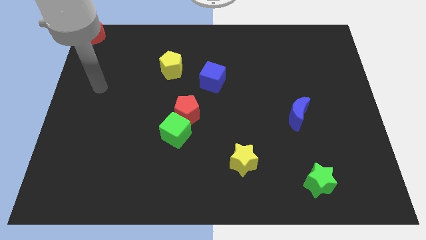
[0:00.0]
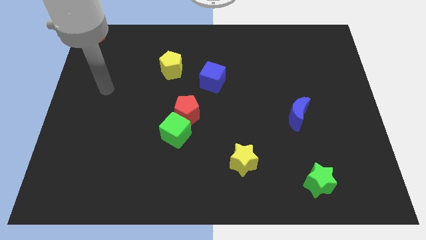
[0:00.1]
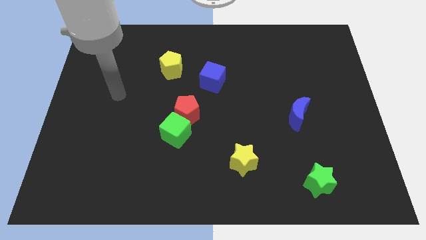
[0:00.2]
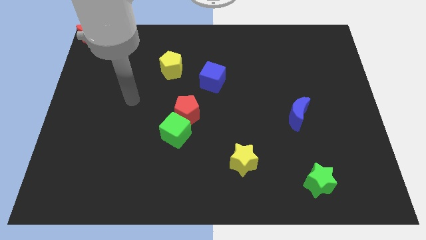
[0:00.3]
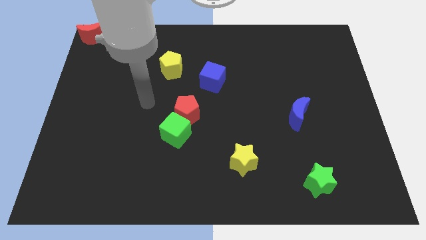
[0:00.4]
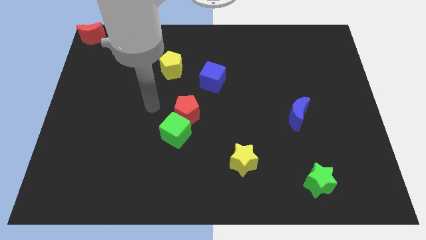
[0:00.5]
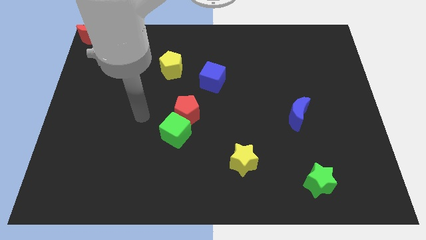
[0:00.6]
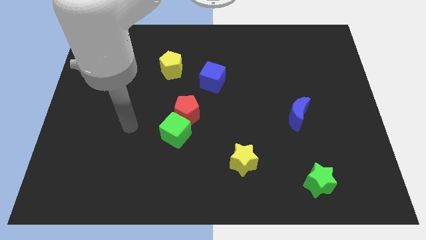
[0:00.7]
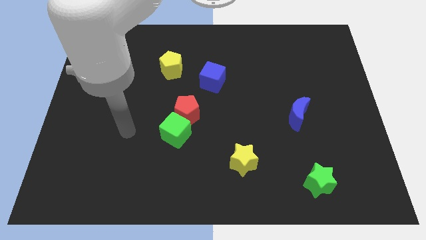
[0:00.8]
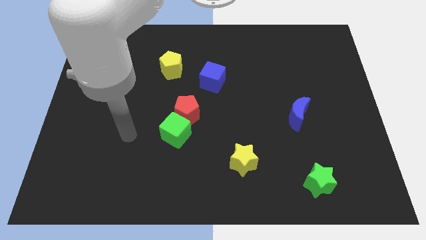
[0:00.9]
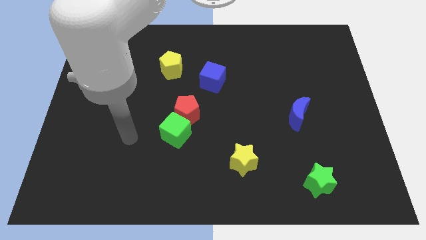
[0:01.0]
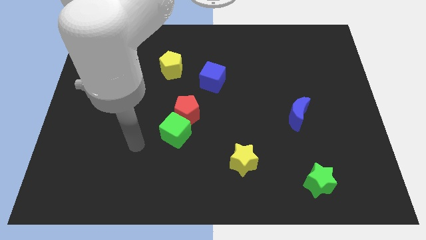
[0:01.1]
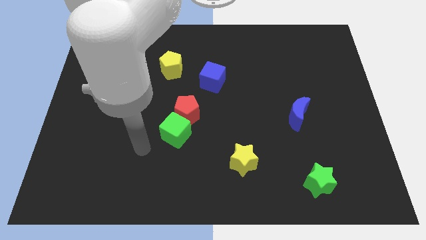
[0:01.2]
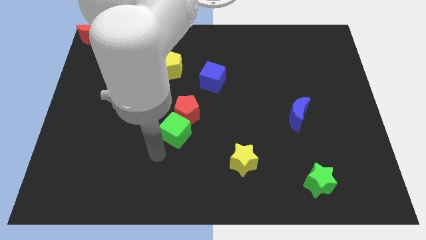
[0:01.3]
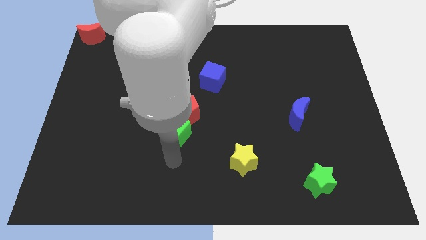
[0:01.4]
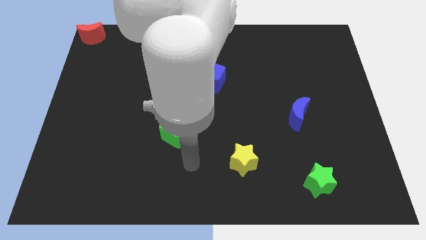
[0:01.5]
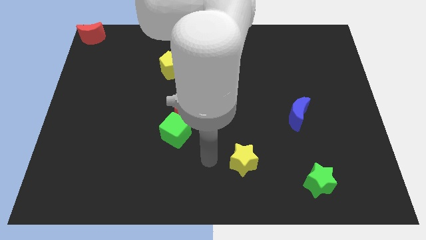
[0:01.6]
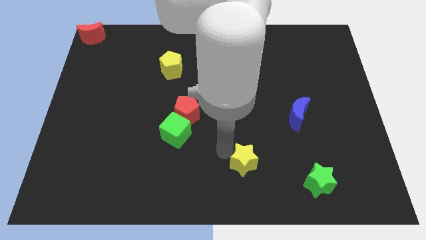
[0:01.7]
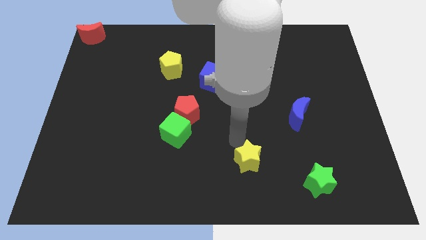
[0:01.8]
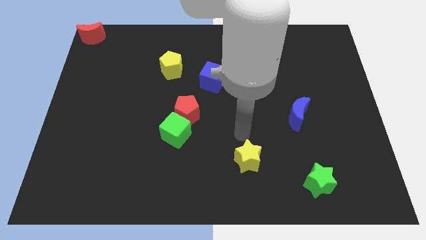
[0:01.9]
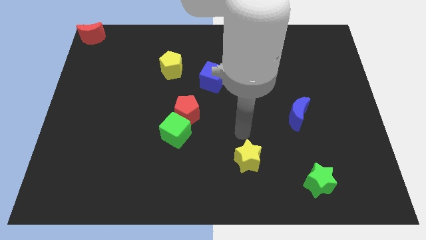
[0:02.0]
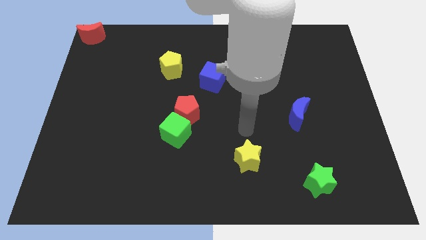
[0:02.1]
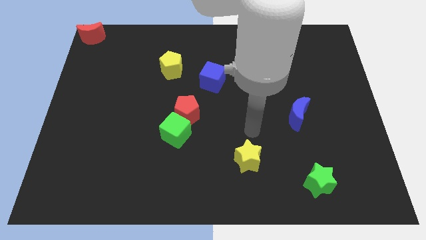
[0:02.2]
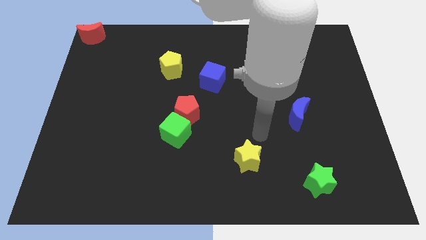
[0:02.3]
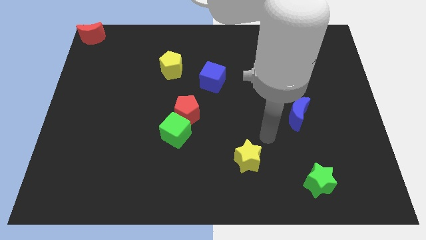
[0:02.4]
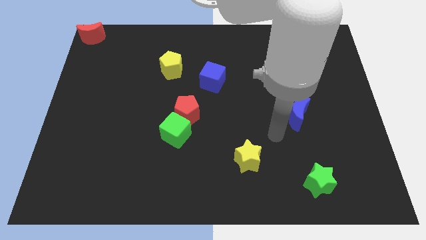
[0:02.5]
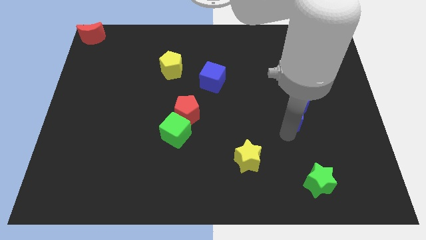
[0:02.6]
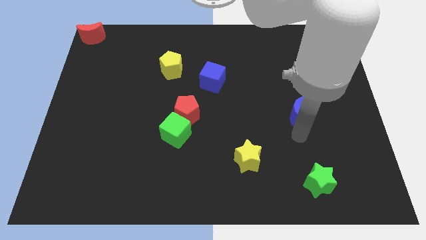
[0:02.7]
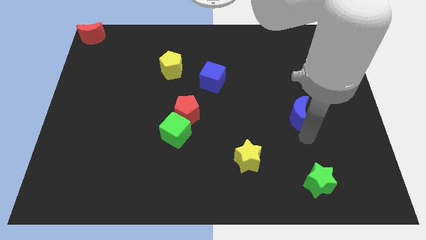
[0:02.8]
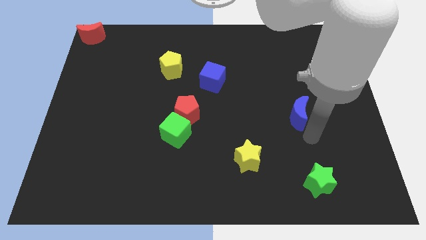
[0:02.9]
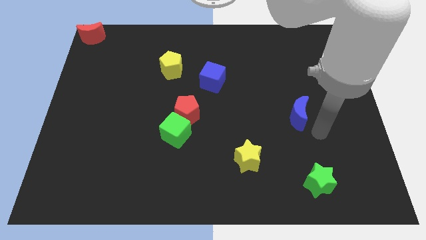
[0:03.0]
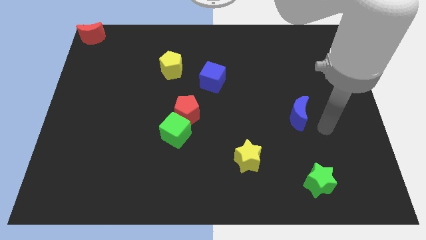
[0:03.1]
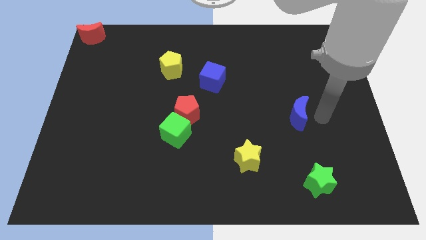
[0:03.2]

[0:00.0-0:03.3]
move your arm to the right of the blue crescent

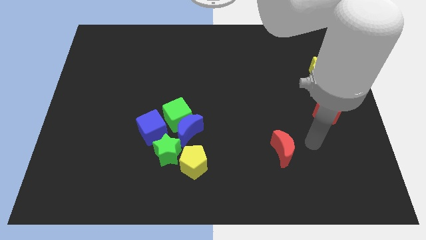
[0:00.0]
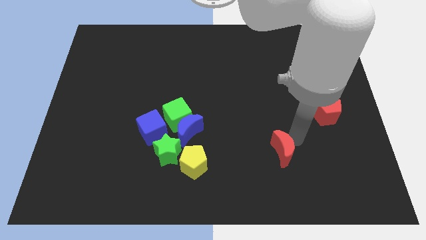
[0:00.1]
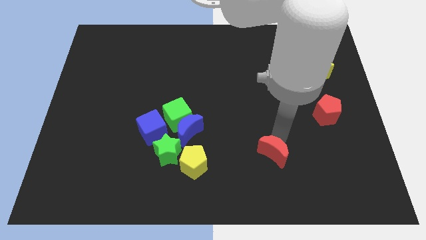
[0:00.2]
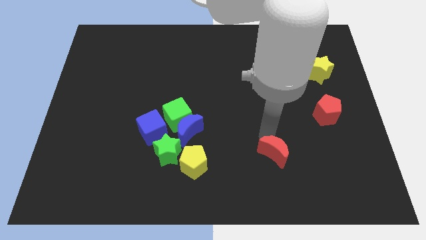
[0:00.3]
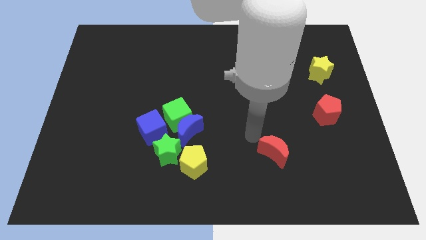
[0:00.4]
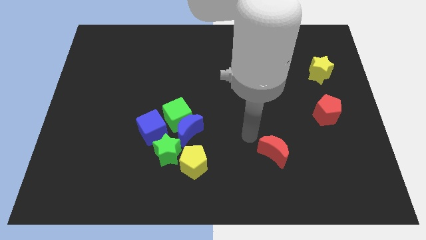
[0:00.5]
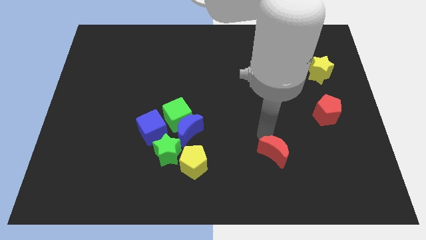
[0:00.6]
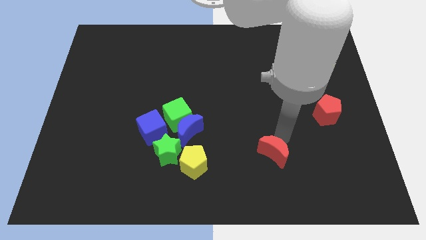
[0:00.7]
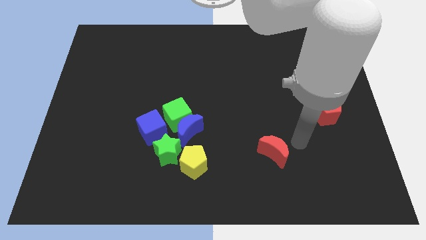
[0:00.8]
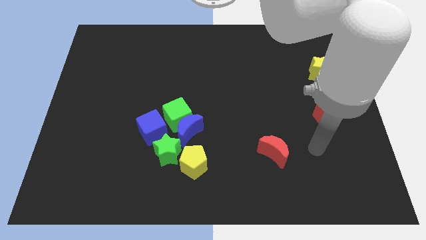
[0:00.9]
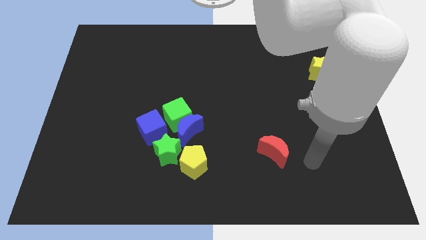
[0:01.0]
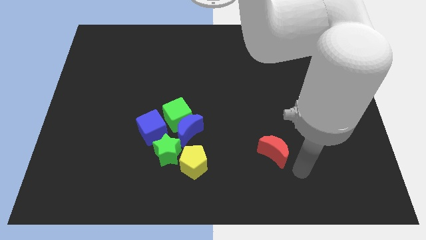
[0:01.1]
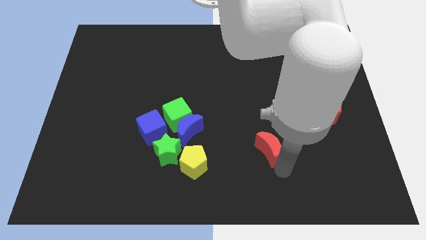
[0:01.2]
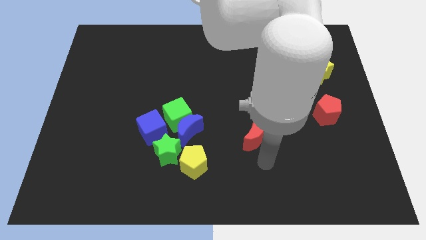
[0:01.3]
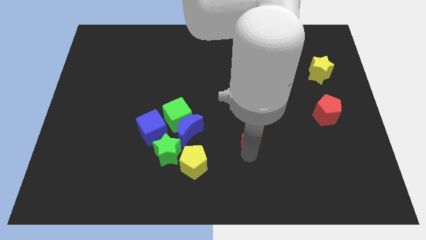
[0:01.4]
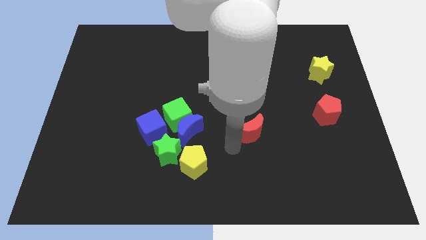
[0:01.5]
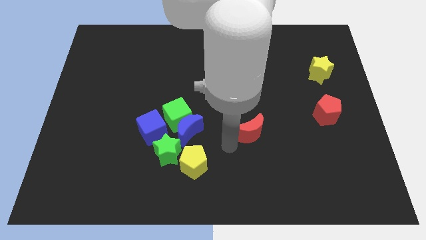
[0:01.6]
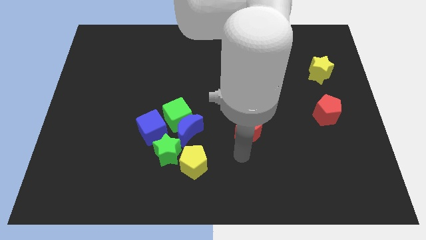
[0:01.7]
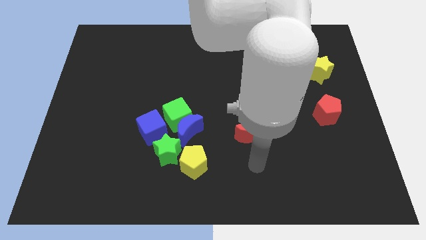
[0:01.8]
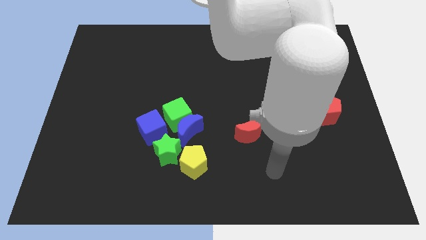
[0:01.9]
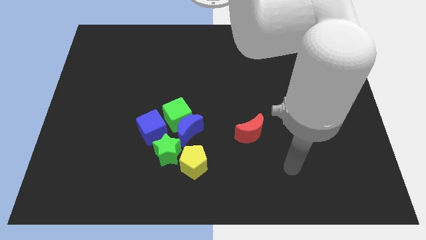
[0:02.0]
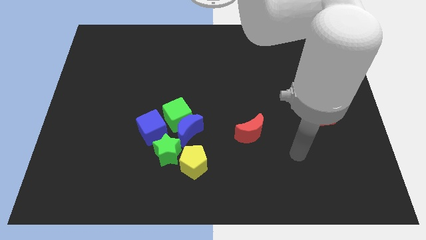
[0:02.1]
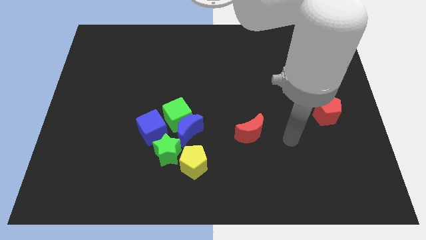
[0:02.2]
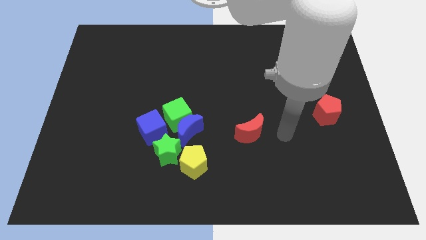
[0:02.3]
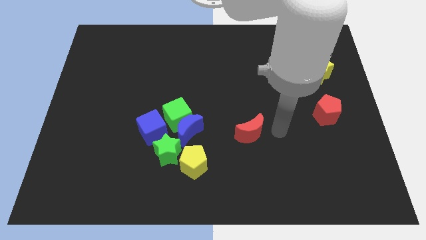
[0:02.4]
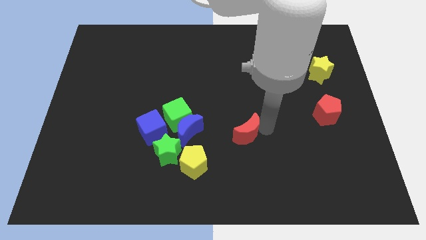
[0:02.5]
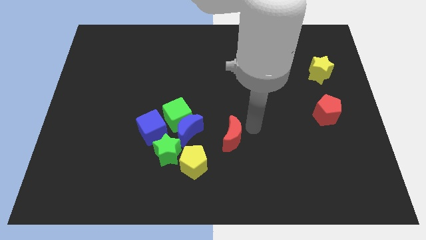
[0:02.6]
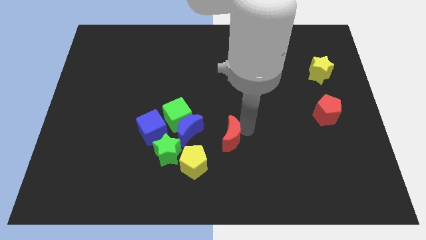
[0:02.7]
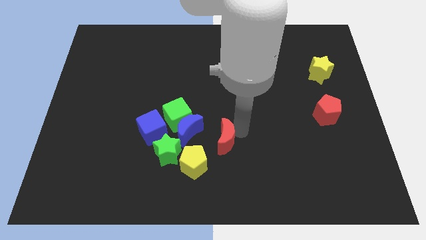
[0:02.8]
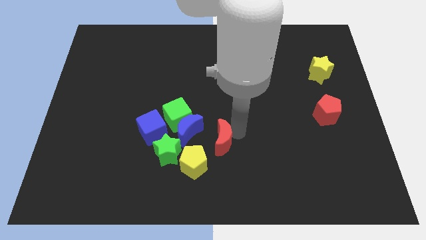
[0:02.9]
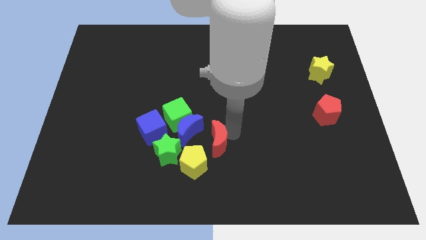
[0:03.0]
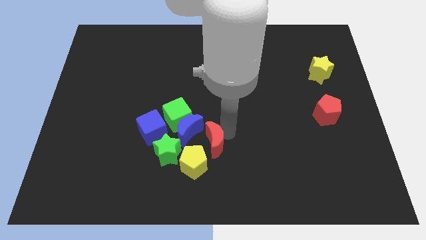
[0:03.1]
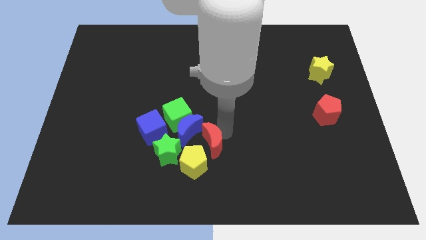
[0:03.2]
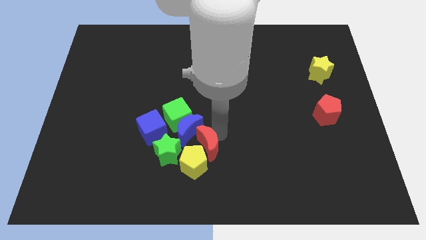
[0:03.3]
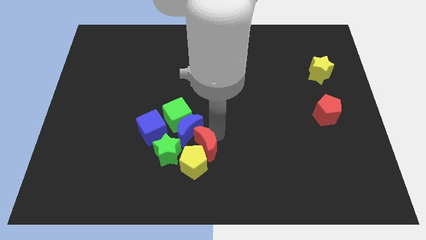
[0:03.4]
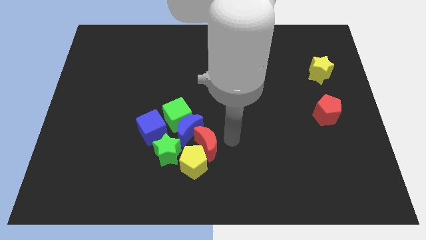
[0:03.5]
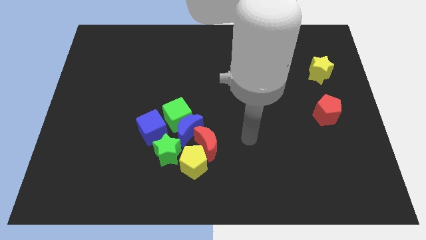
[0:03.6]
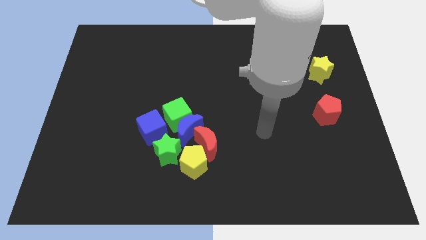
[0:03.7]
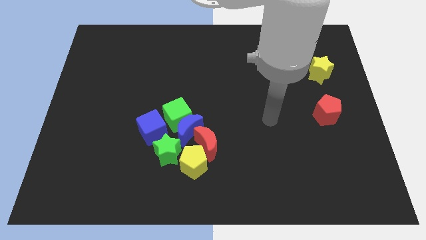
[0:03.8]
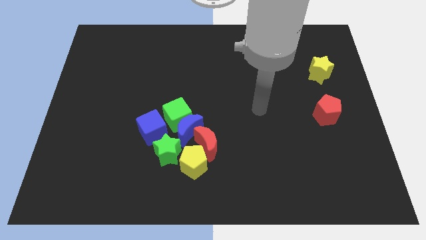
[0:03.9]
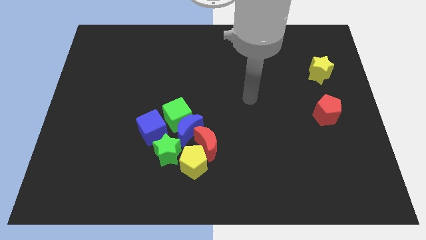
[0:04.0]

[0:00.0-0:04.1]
push red moon into yellow pentagon

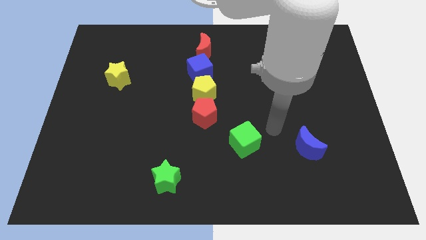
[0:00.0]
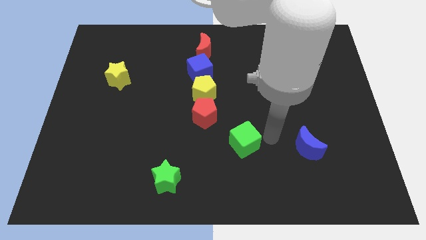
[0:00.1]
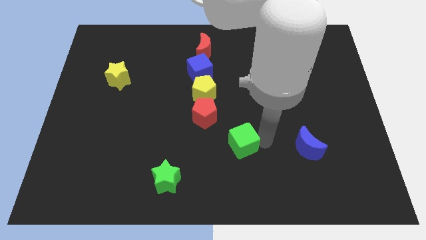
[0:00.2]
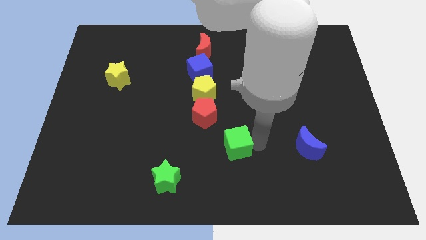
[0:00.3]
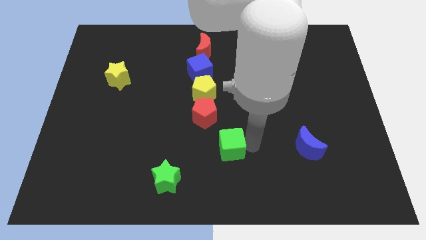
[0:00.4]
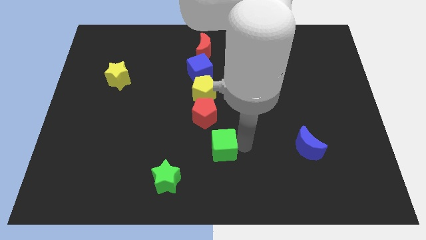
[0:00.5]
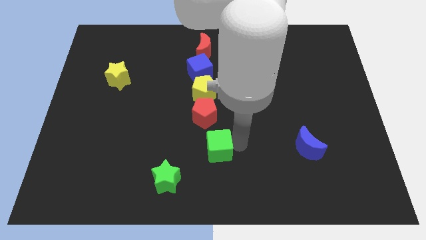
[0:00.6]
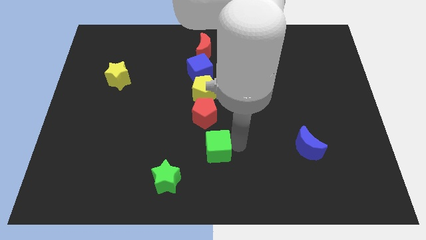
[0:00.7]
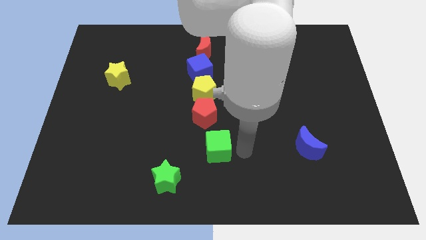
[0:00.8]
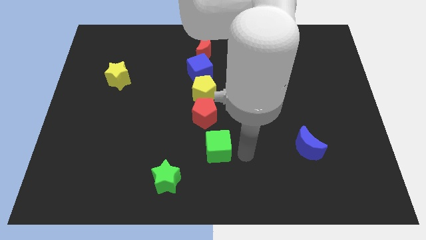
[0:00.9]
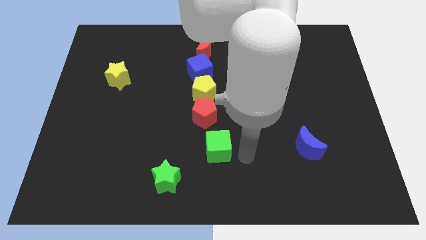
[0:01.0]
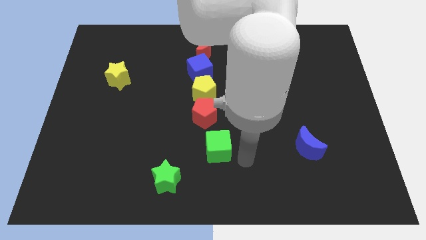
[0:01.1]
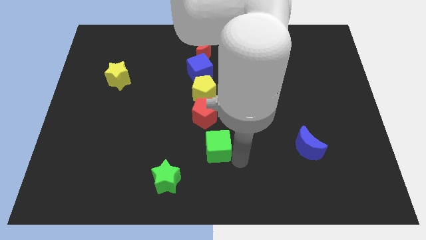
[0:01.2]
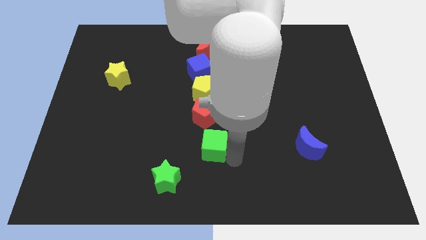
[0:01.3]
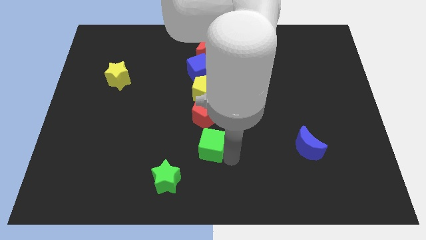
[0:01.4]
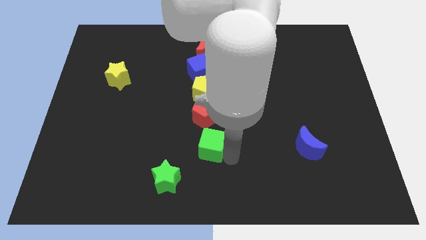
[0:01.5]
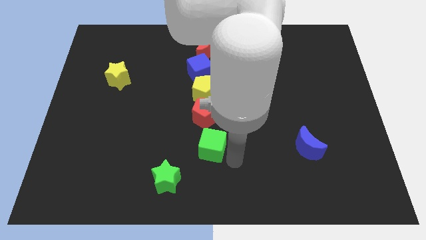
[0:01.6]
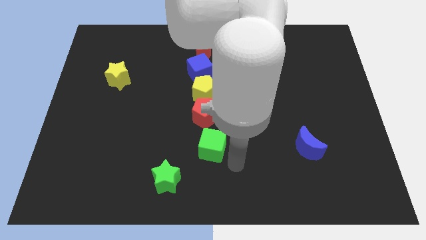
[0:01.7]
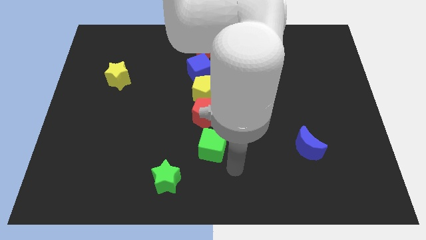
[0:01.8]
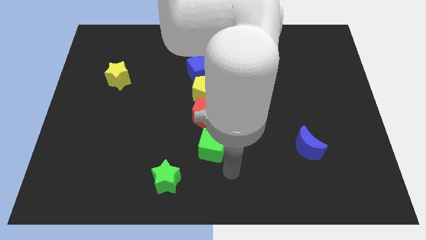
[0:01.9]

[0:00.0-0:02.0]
drag the green cube to the bottom of red pentagon
